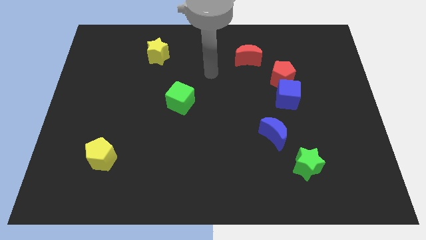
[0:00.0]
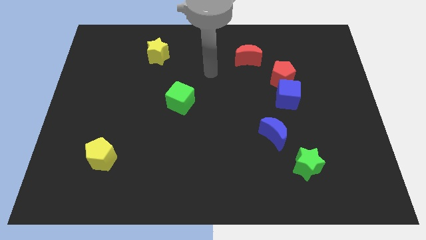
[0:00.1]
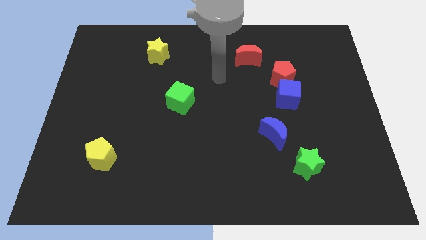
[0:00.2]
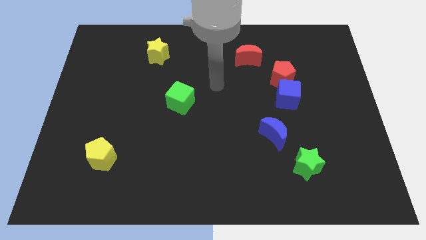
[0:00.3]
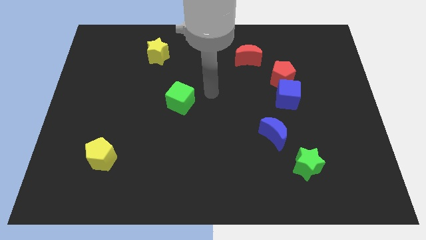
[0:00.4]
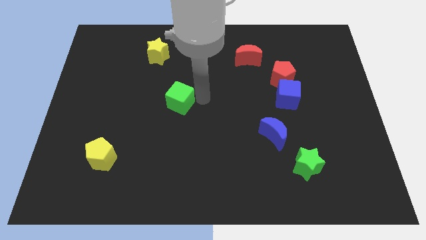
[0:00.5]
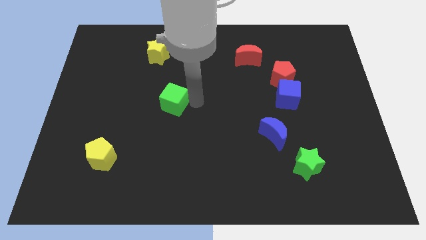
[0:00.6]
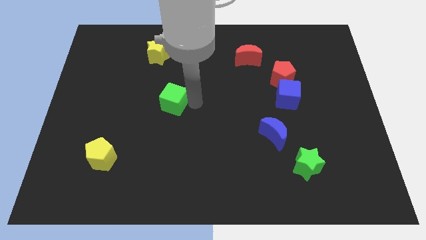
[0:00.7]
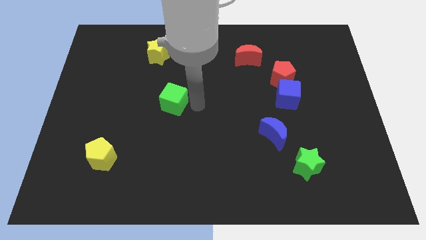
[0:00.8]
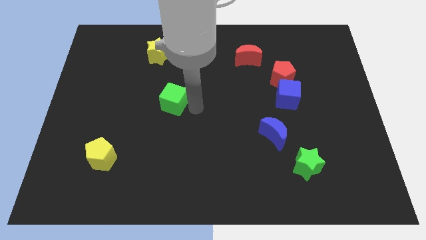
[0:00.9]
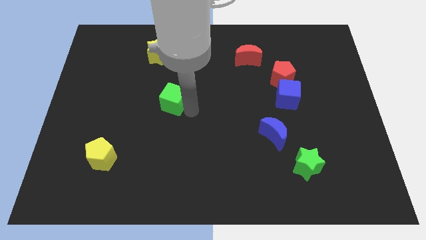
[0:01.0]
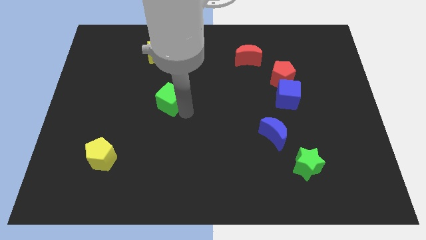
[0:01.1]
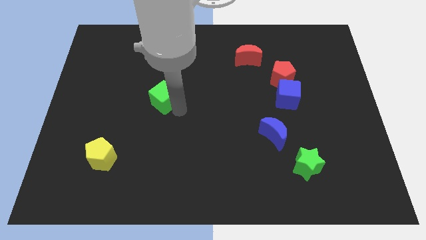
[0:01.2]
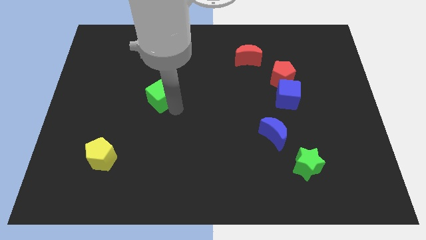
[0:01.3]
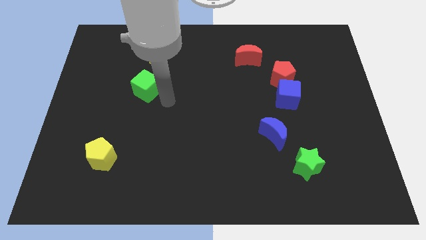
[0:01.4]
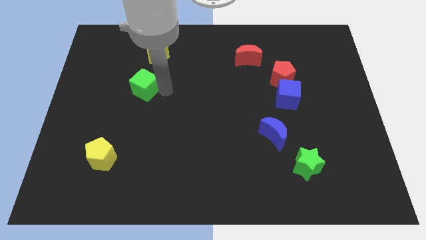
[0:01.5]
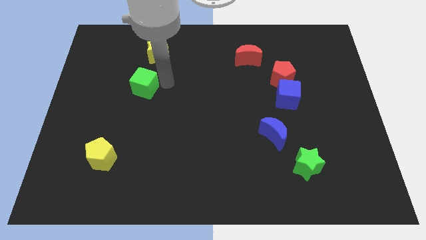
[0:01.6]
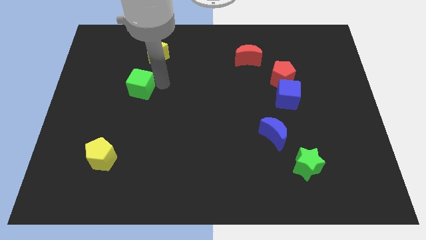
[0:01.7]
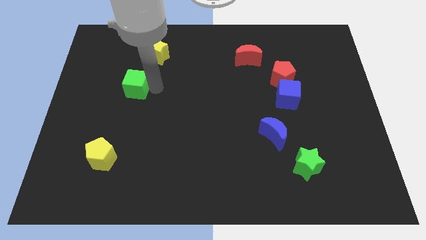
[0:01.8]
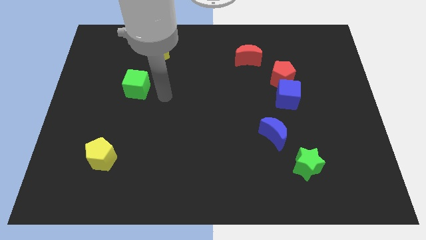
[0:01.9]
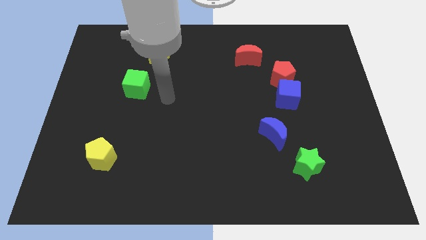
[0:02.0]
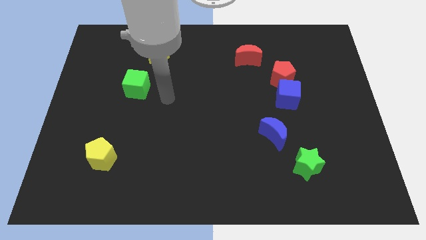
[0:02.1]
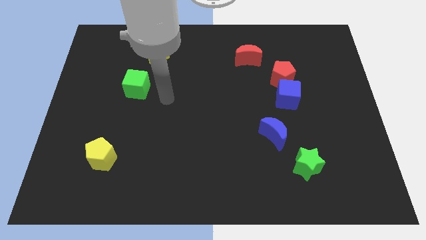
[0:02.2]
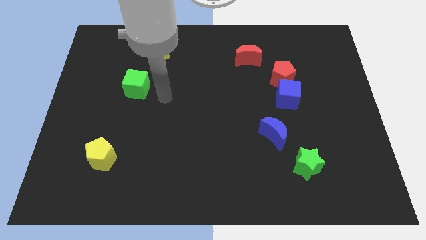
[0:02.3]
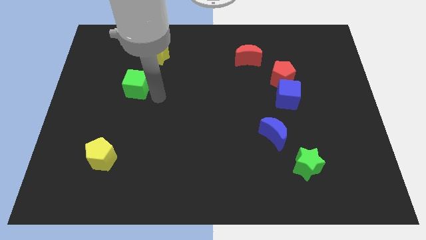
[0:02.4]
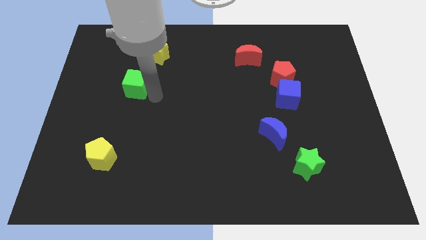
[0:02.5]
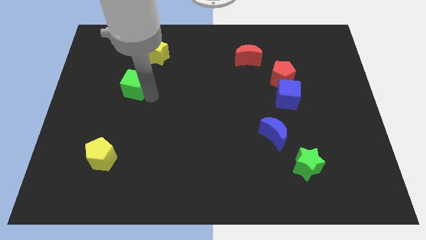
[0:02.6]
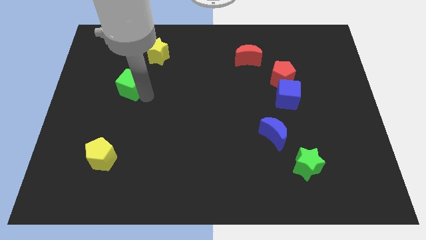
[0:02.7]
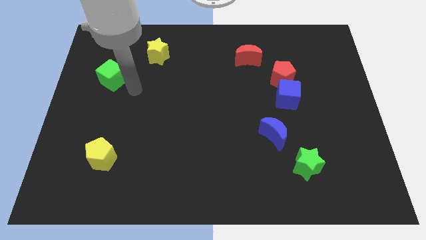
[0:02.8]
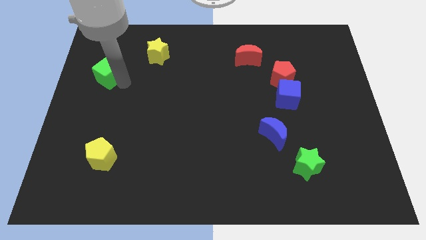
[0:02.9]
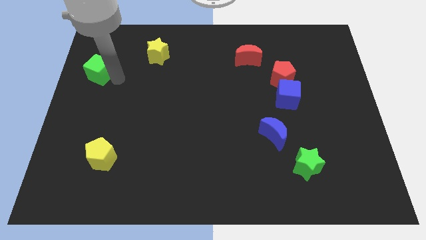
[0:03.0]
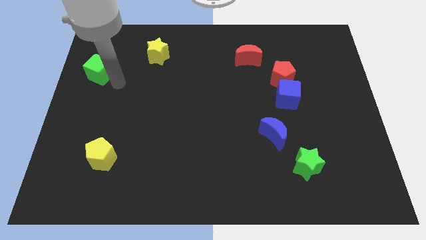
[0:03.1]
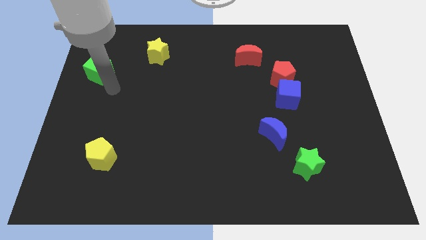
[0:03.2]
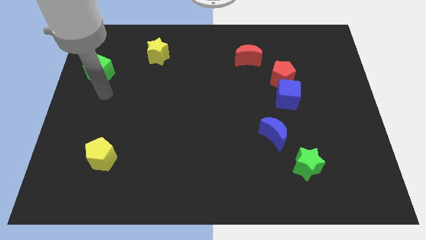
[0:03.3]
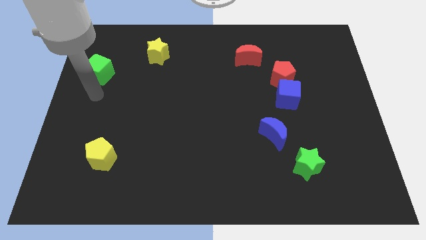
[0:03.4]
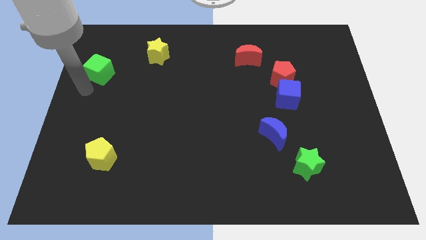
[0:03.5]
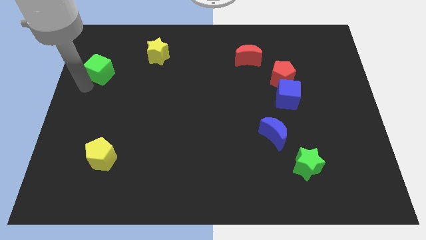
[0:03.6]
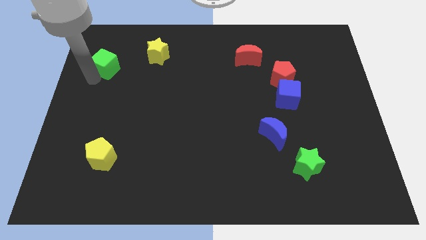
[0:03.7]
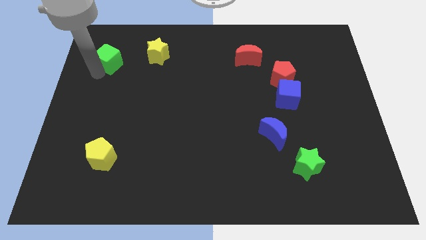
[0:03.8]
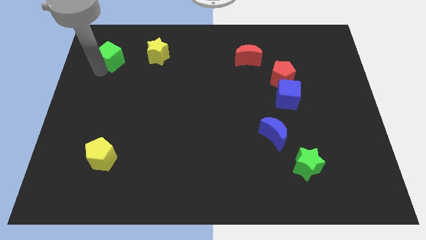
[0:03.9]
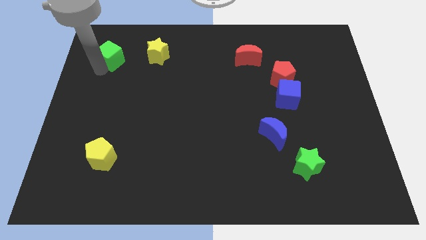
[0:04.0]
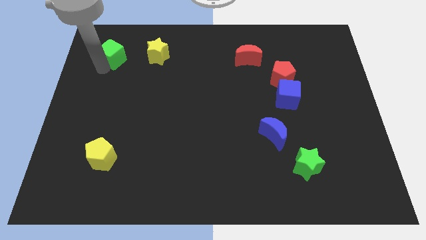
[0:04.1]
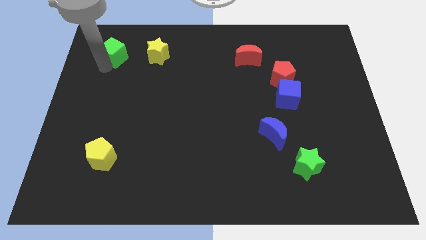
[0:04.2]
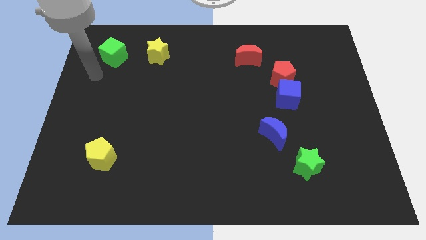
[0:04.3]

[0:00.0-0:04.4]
move the green cube to the left side of the yellow star

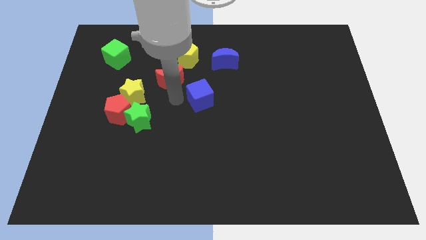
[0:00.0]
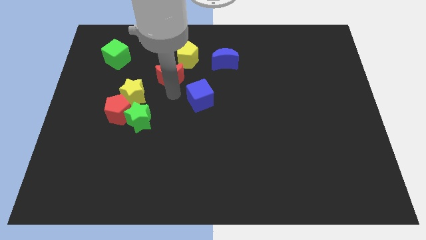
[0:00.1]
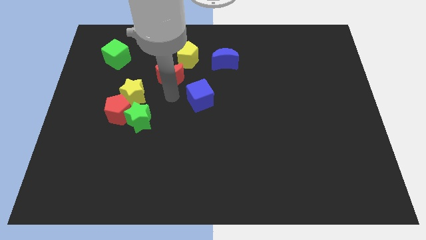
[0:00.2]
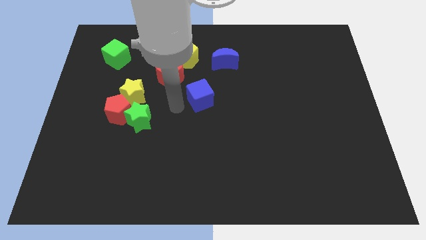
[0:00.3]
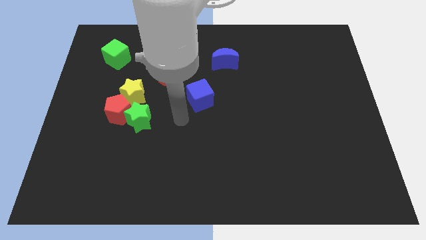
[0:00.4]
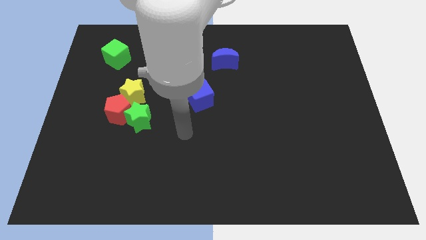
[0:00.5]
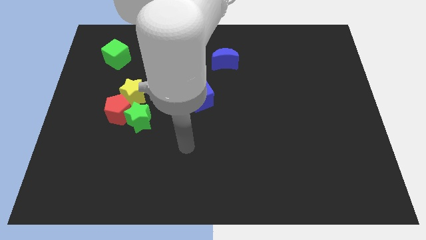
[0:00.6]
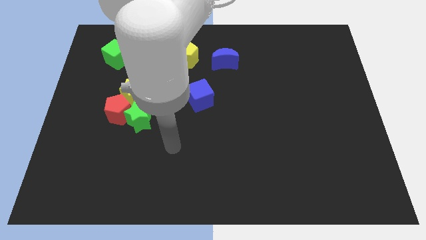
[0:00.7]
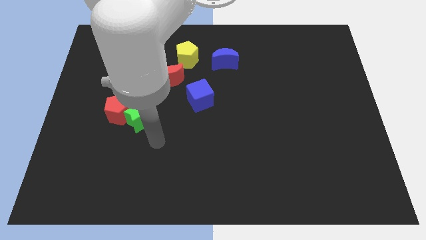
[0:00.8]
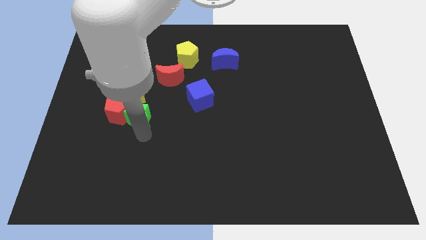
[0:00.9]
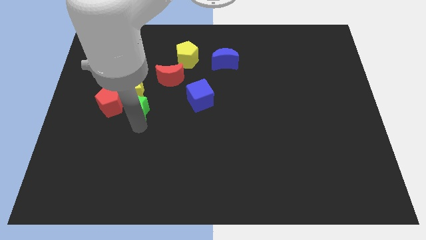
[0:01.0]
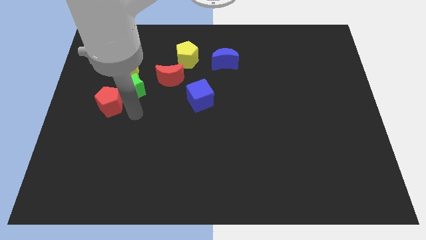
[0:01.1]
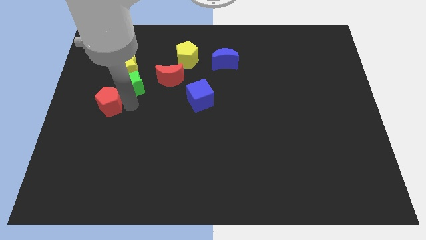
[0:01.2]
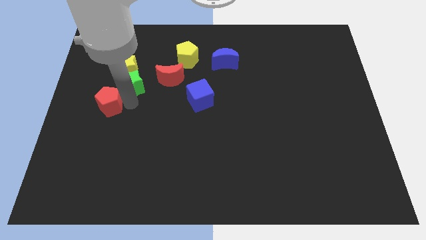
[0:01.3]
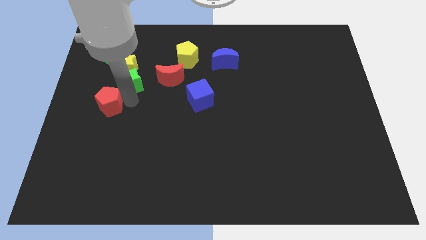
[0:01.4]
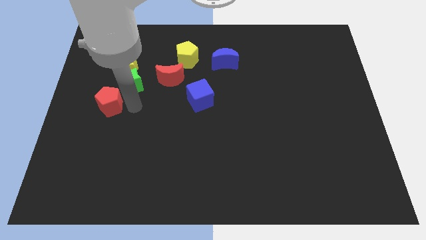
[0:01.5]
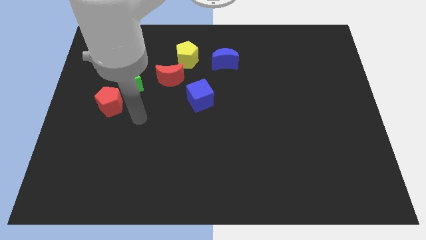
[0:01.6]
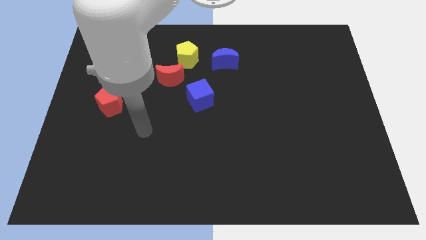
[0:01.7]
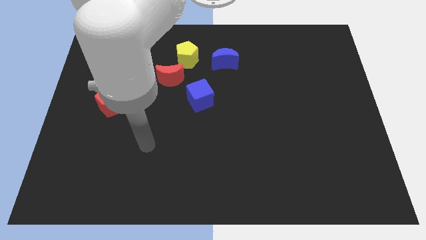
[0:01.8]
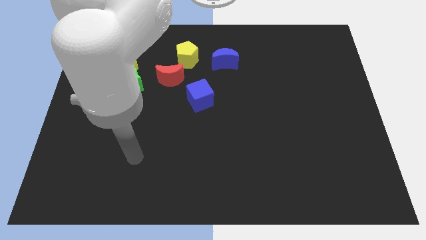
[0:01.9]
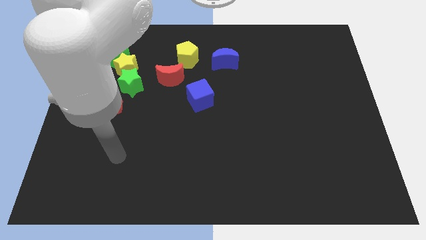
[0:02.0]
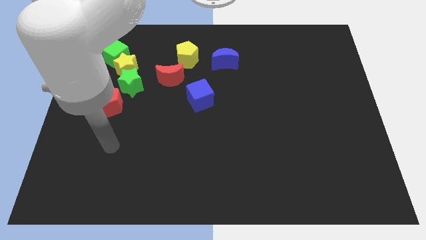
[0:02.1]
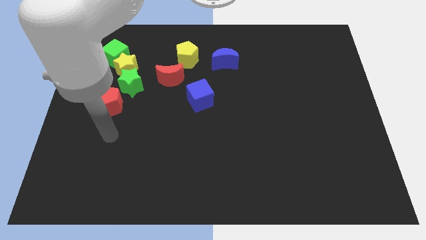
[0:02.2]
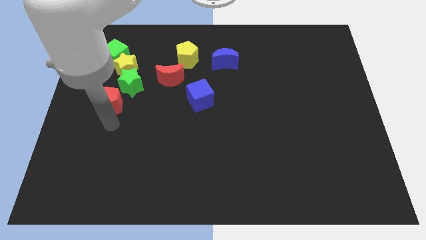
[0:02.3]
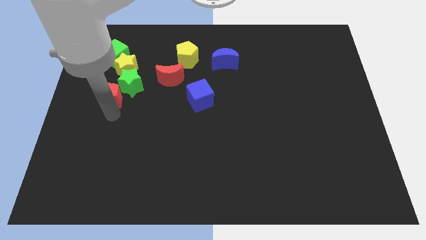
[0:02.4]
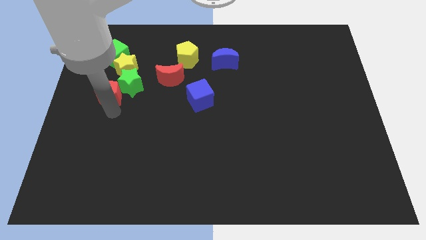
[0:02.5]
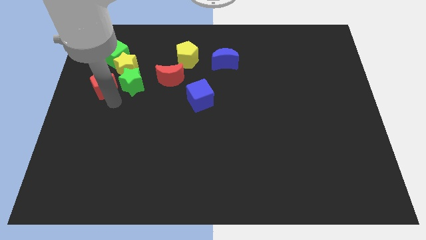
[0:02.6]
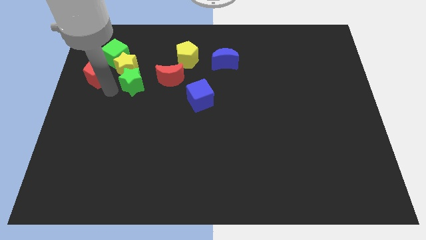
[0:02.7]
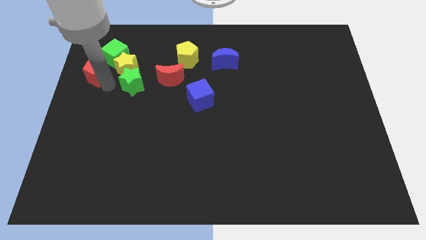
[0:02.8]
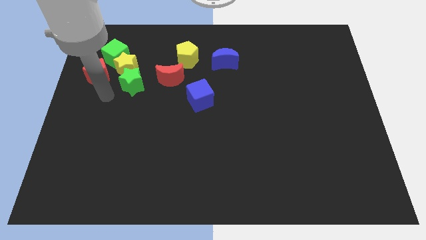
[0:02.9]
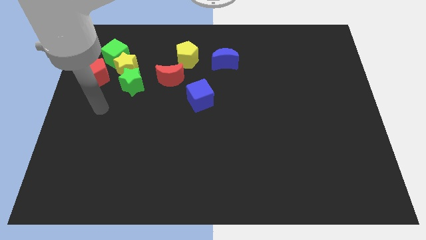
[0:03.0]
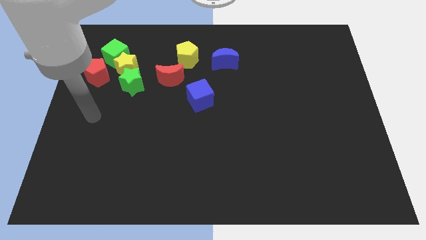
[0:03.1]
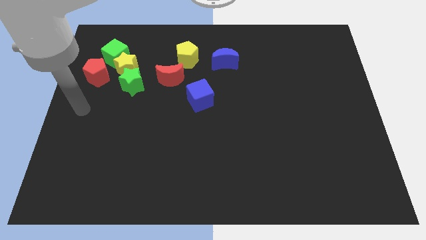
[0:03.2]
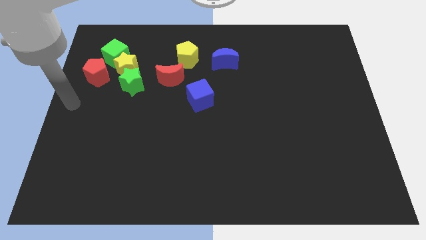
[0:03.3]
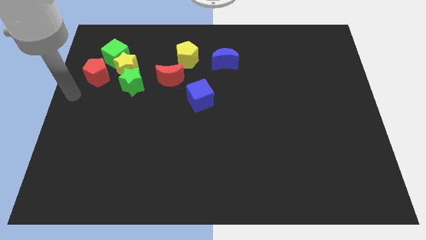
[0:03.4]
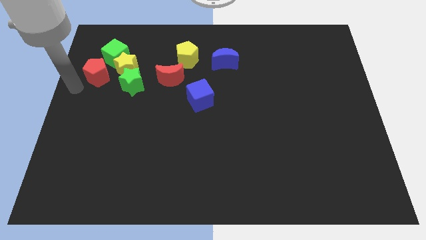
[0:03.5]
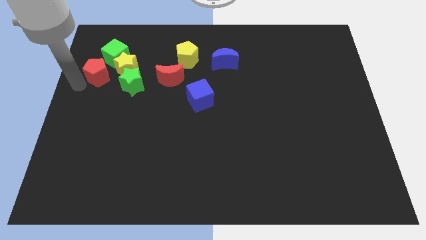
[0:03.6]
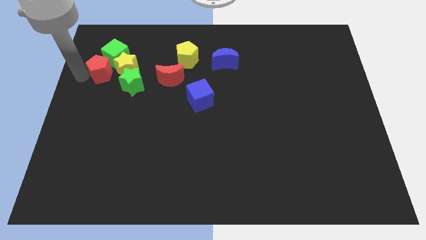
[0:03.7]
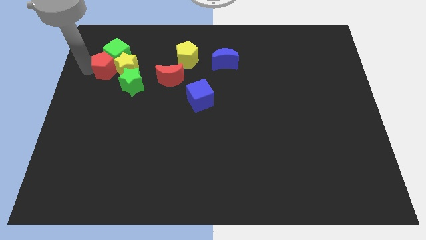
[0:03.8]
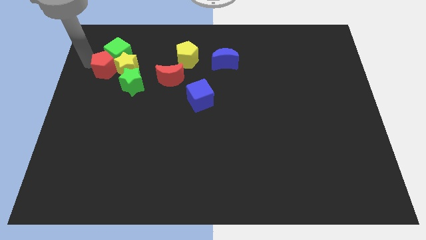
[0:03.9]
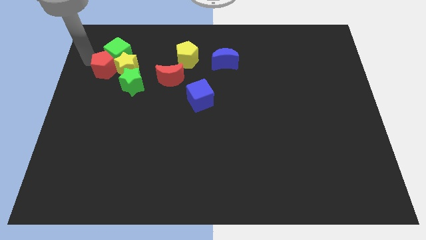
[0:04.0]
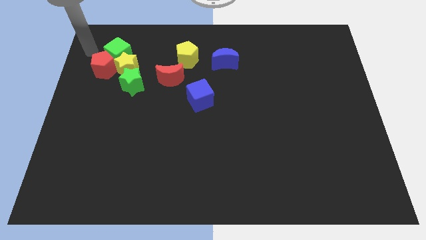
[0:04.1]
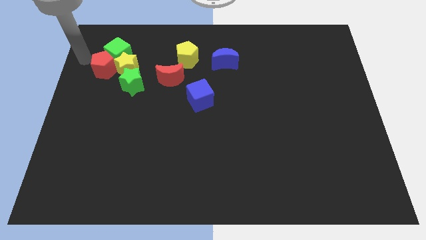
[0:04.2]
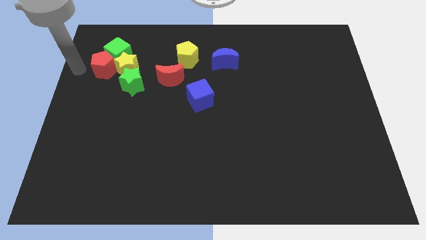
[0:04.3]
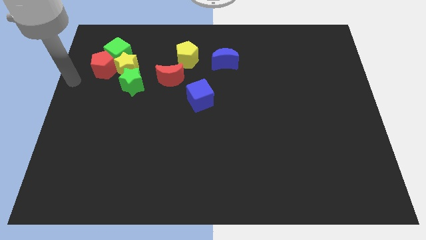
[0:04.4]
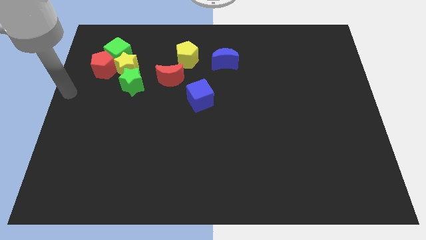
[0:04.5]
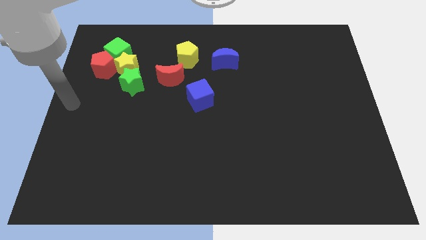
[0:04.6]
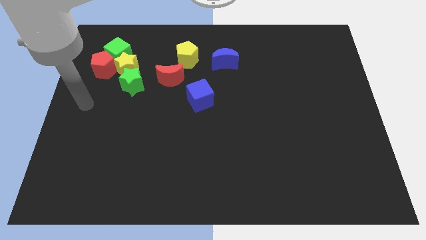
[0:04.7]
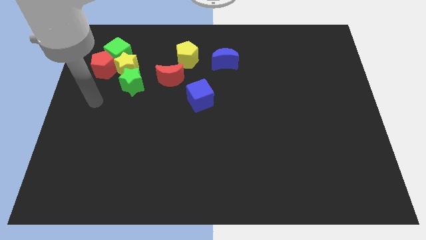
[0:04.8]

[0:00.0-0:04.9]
move the red pentagon to the bottom left of green cube
